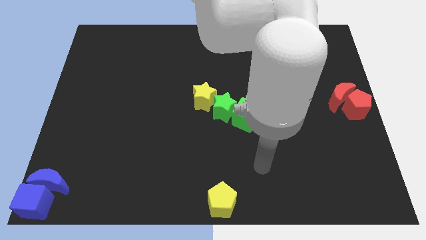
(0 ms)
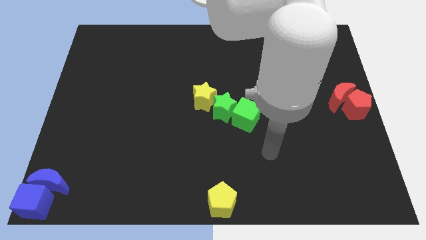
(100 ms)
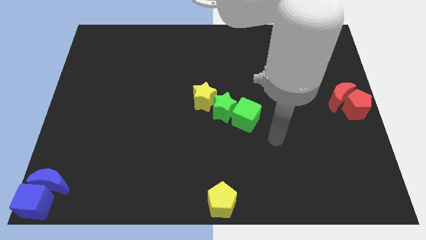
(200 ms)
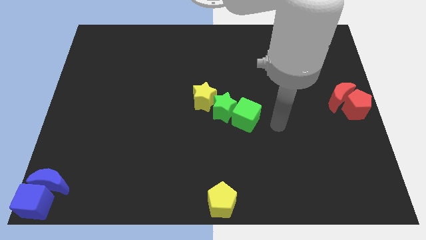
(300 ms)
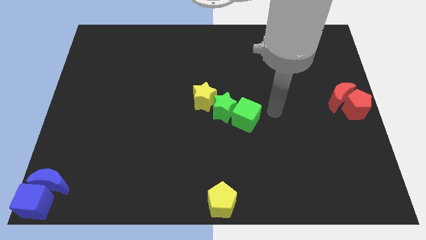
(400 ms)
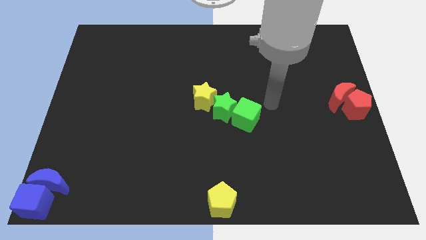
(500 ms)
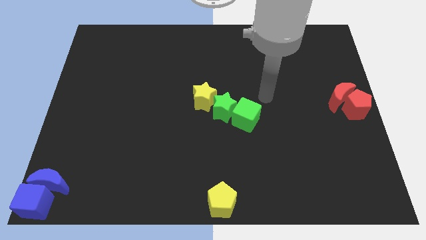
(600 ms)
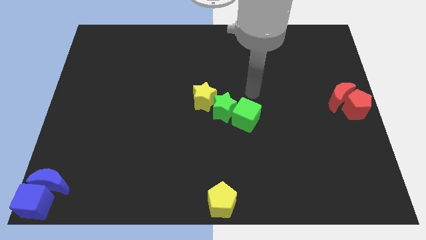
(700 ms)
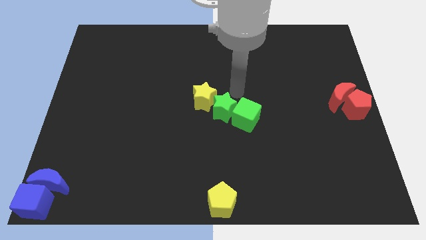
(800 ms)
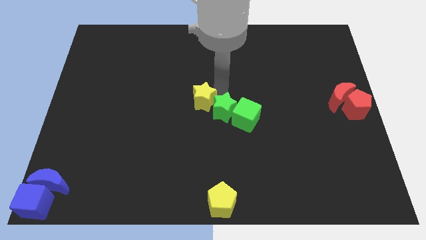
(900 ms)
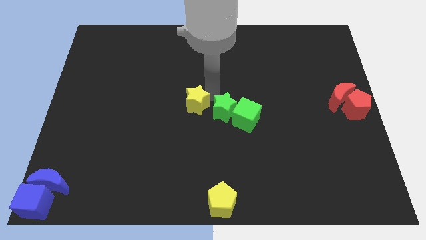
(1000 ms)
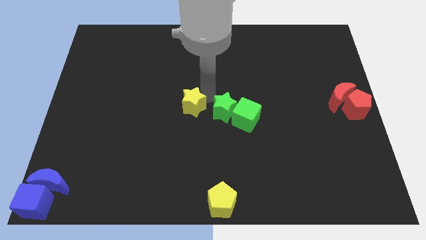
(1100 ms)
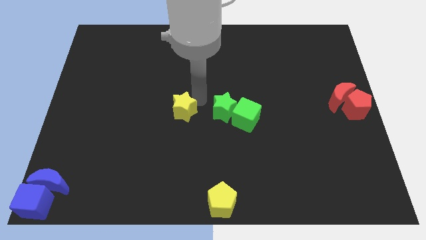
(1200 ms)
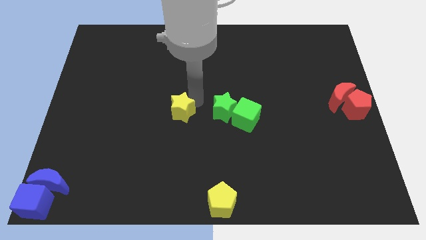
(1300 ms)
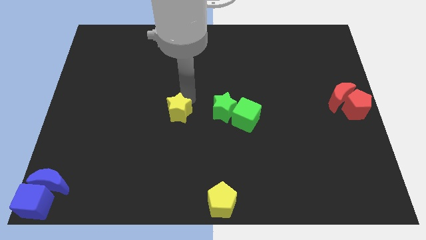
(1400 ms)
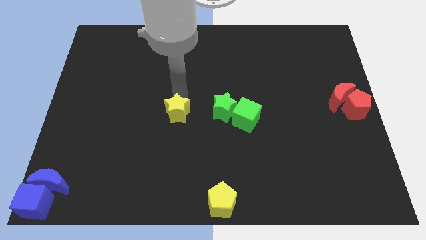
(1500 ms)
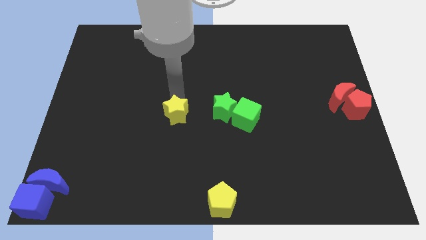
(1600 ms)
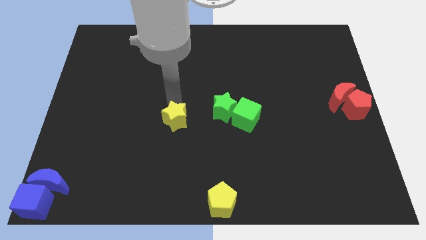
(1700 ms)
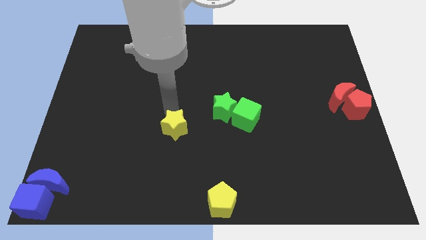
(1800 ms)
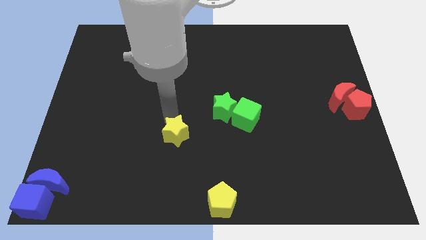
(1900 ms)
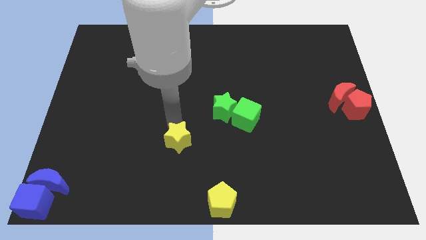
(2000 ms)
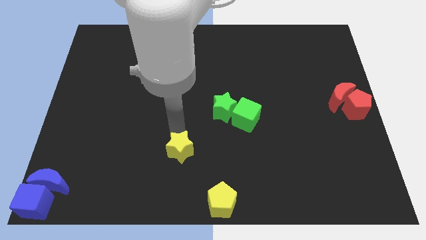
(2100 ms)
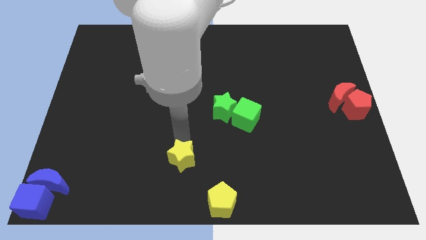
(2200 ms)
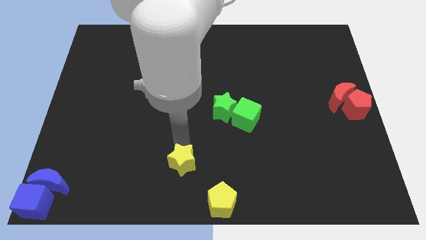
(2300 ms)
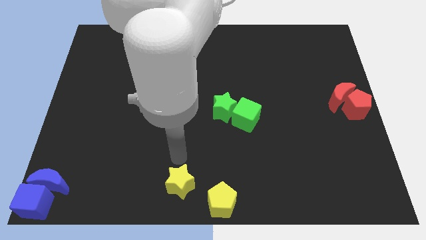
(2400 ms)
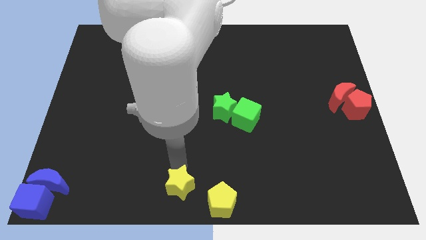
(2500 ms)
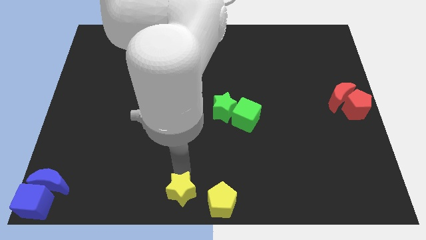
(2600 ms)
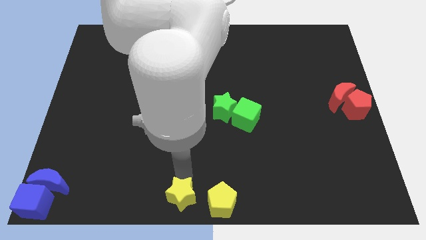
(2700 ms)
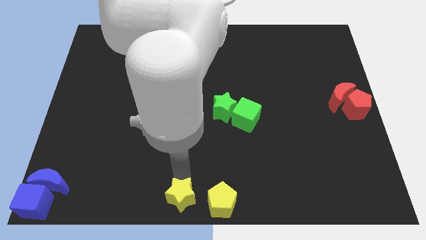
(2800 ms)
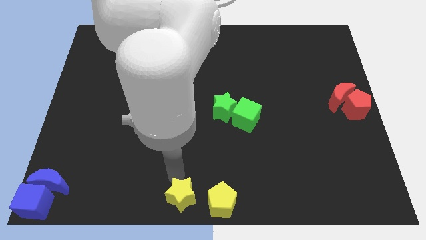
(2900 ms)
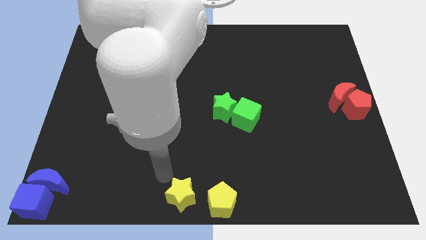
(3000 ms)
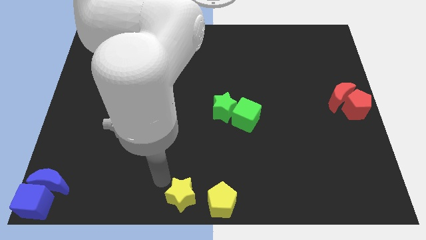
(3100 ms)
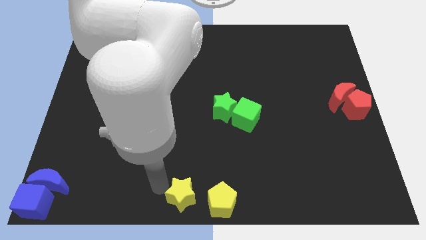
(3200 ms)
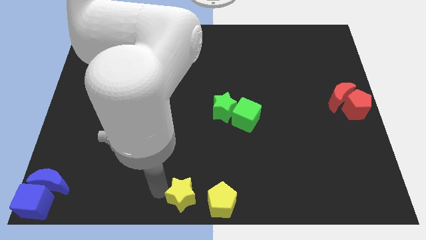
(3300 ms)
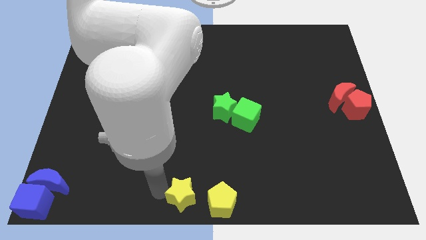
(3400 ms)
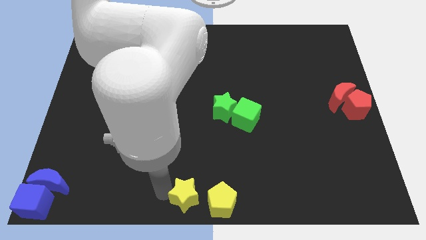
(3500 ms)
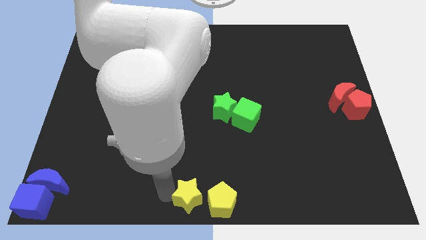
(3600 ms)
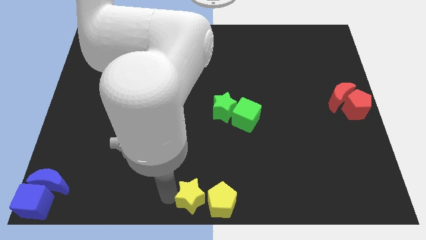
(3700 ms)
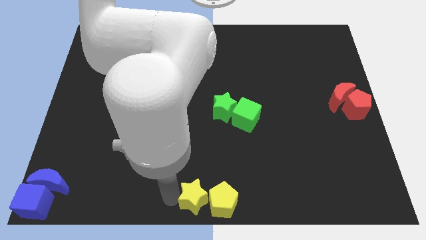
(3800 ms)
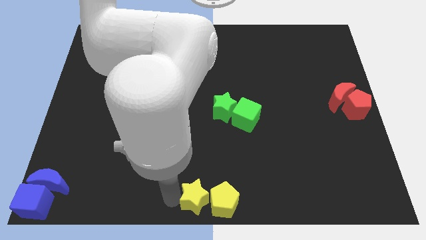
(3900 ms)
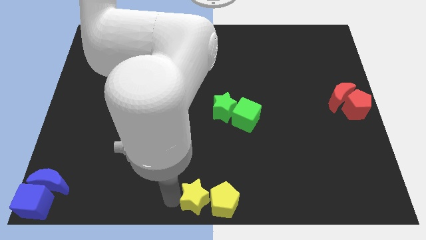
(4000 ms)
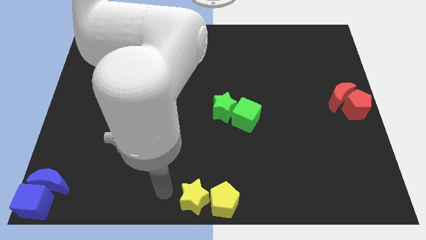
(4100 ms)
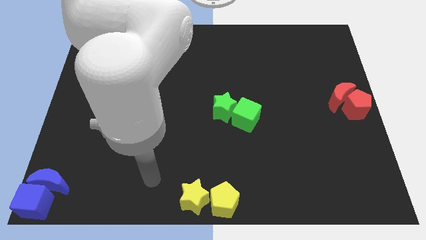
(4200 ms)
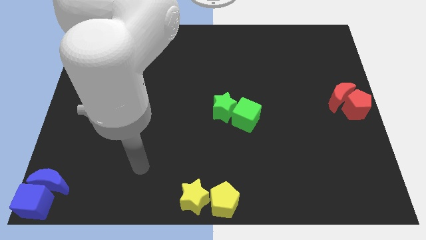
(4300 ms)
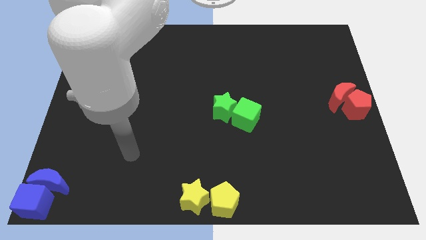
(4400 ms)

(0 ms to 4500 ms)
slide the yellow star to the left side of the yellow pentagon

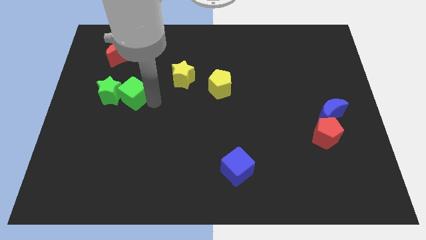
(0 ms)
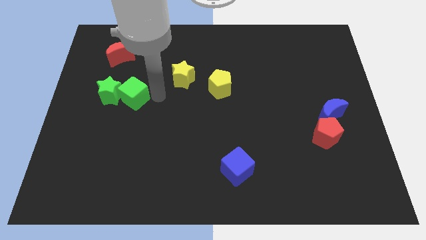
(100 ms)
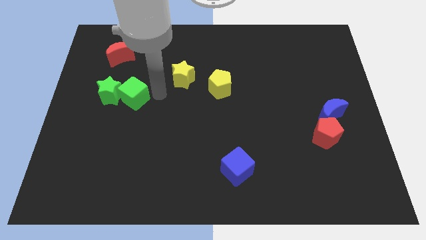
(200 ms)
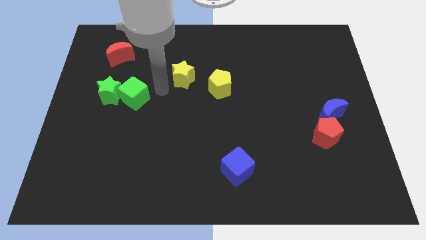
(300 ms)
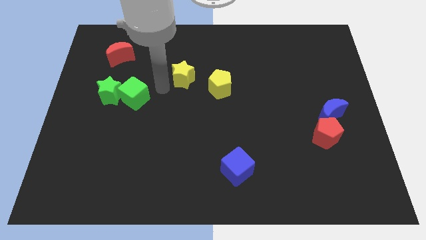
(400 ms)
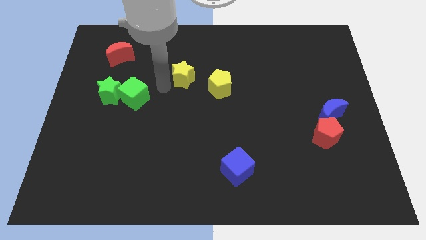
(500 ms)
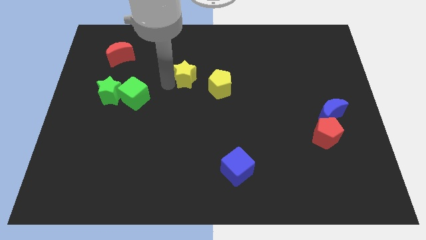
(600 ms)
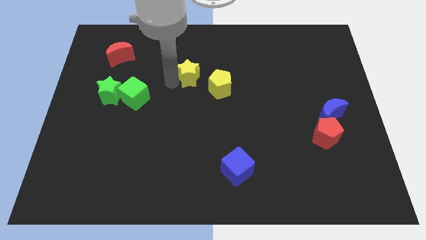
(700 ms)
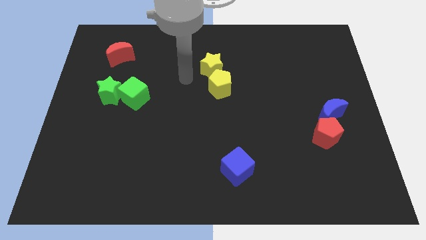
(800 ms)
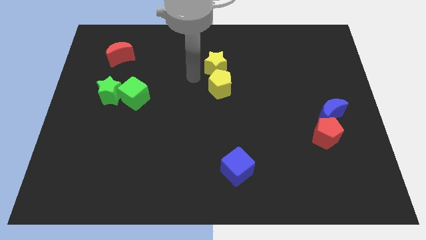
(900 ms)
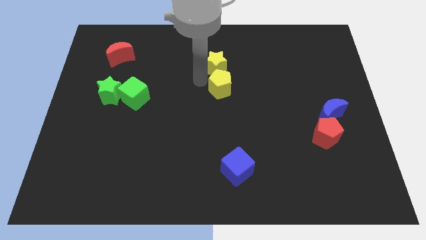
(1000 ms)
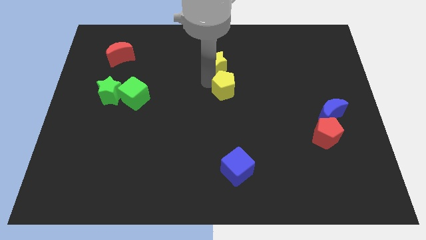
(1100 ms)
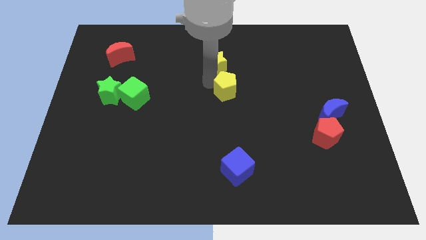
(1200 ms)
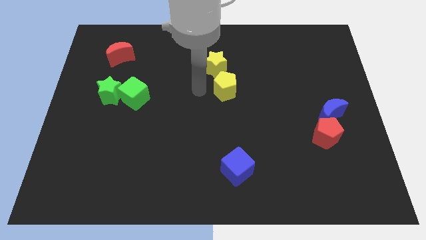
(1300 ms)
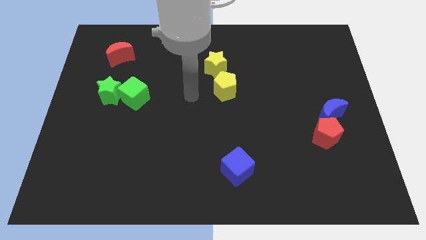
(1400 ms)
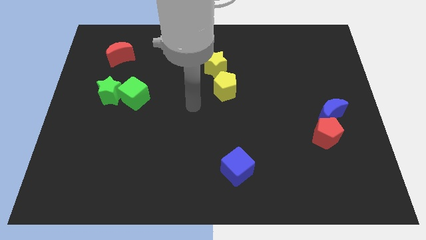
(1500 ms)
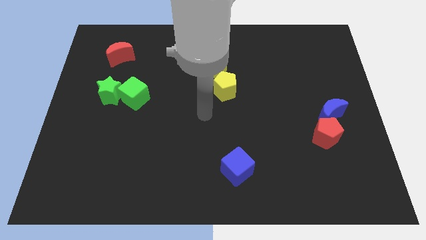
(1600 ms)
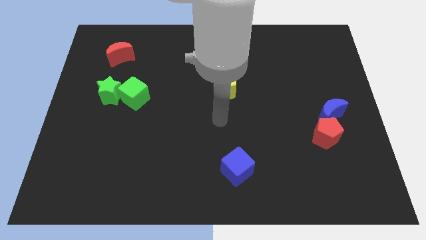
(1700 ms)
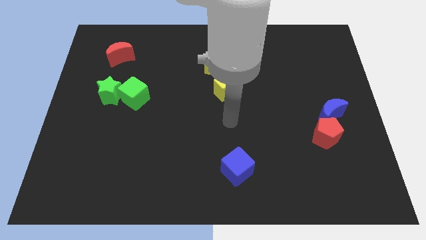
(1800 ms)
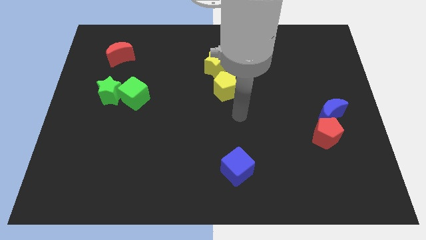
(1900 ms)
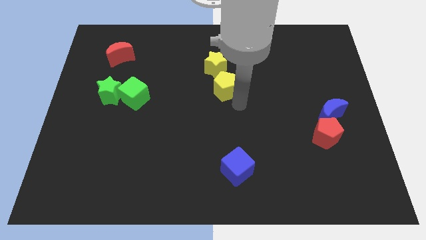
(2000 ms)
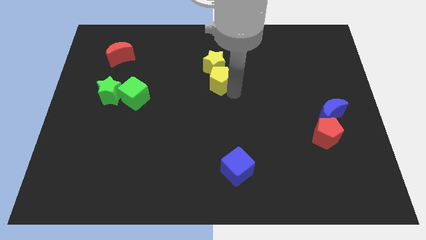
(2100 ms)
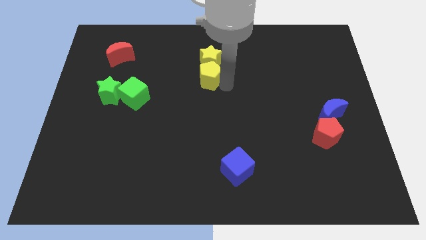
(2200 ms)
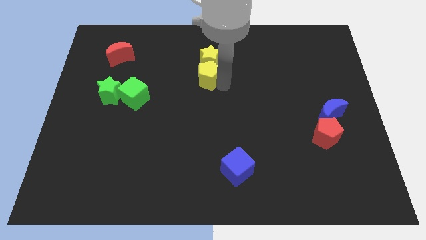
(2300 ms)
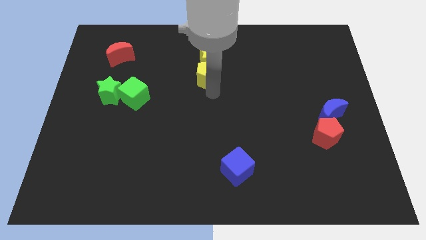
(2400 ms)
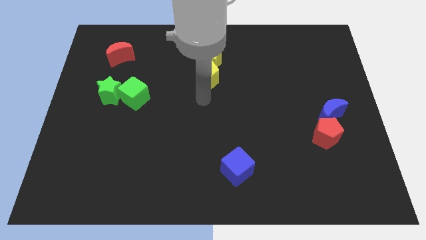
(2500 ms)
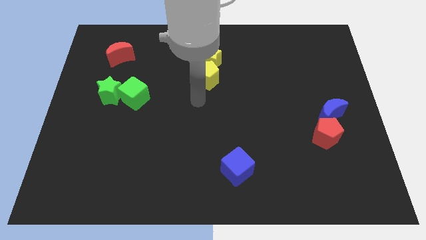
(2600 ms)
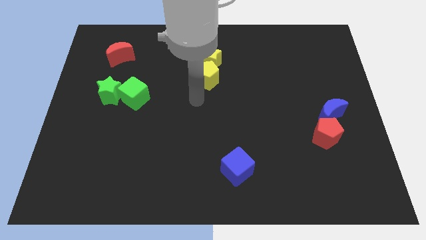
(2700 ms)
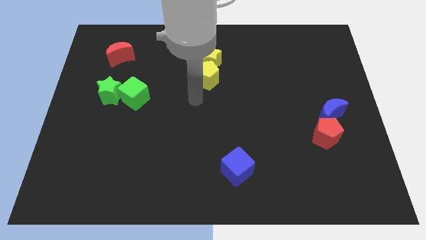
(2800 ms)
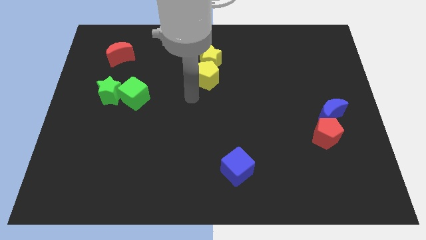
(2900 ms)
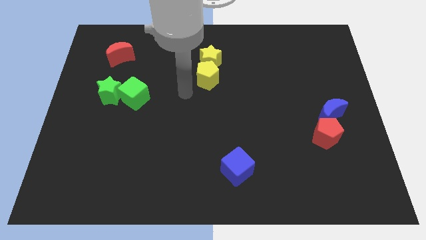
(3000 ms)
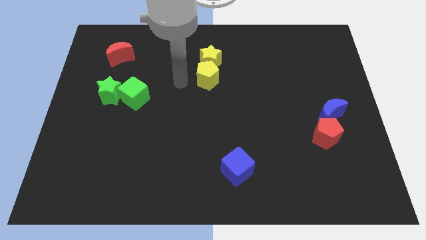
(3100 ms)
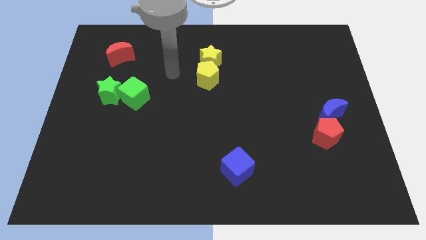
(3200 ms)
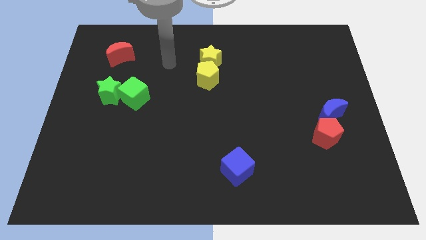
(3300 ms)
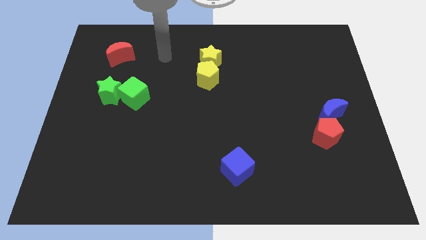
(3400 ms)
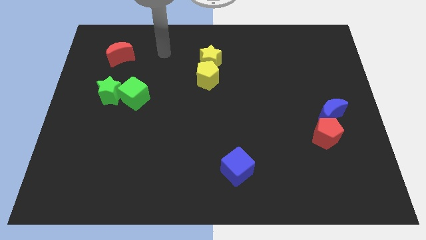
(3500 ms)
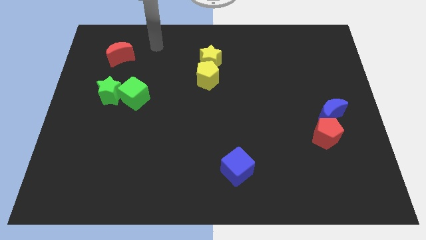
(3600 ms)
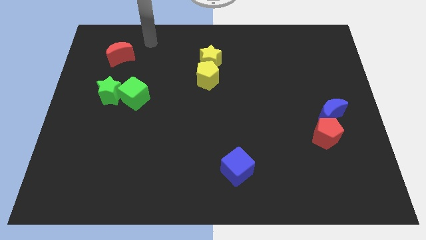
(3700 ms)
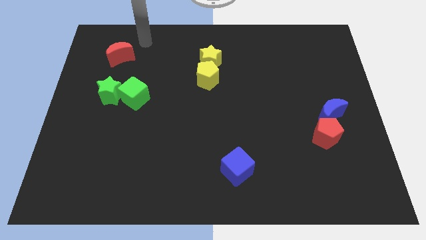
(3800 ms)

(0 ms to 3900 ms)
push both yellow star and yellow pentagon towards the top center of the board

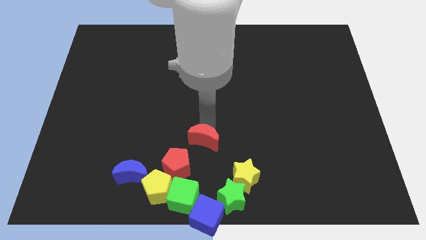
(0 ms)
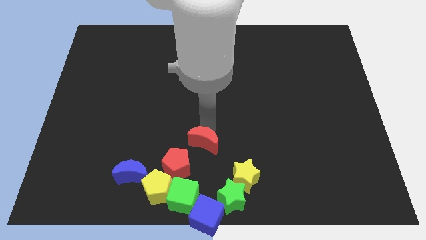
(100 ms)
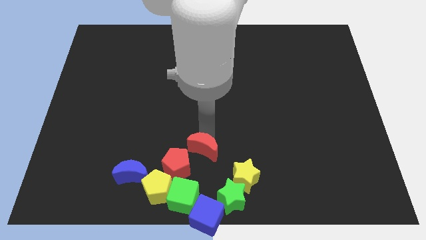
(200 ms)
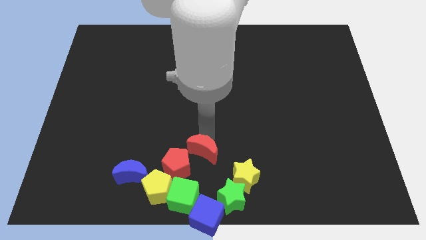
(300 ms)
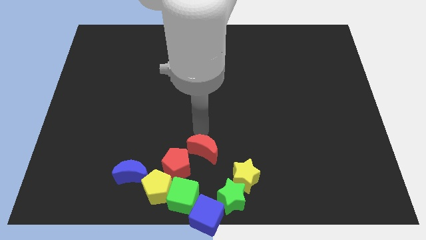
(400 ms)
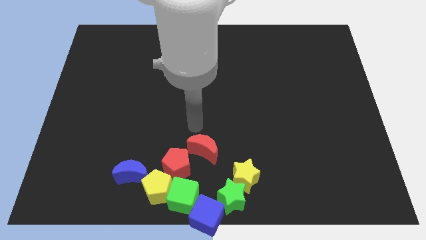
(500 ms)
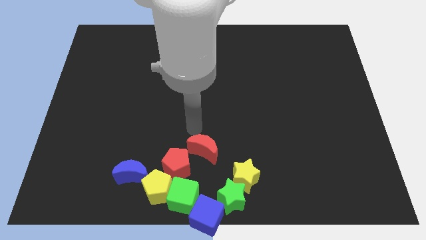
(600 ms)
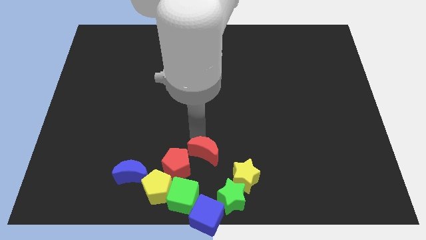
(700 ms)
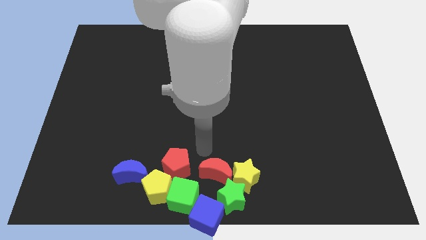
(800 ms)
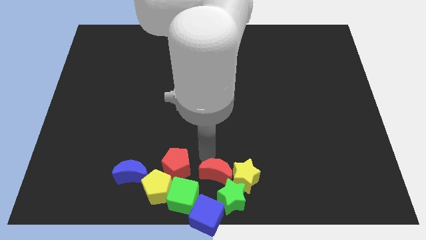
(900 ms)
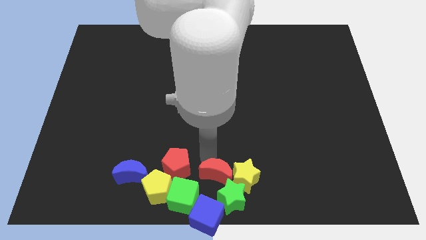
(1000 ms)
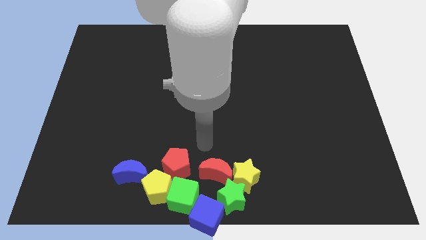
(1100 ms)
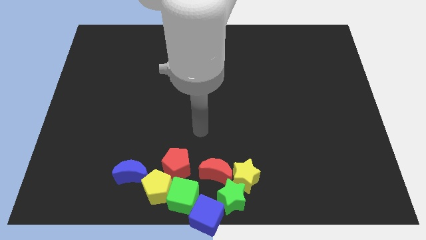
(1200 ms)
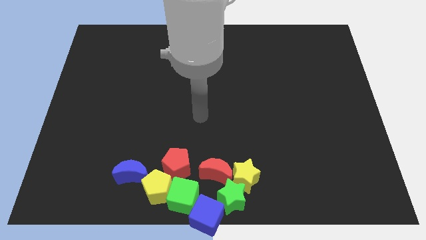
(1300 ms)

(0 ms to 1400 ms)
place the red moon in between the red pentagon and the yellow star
